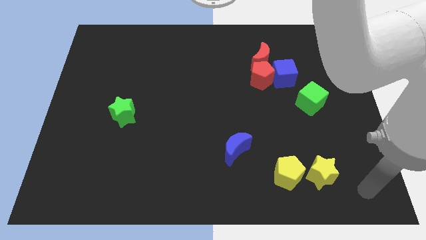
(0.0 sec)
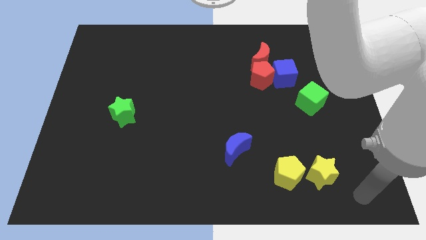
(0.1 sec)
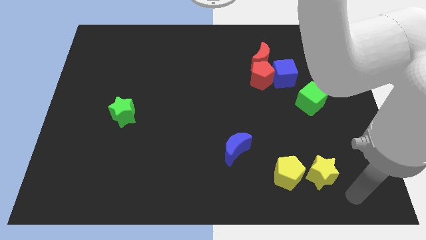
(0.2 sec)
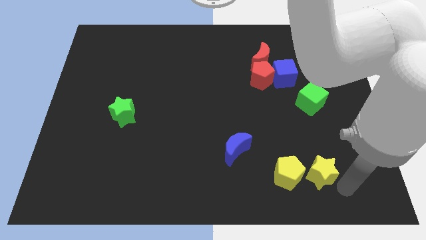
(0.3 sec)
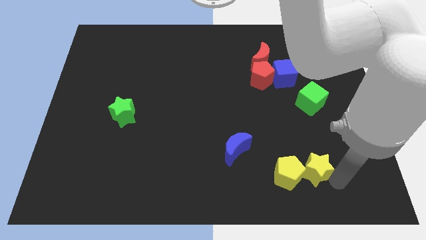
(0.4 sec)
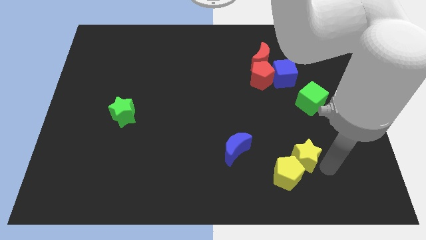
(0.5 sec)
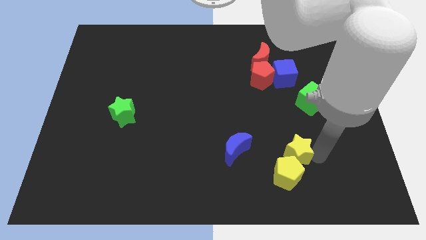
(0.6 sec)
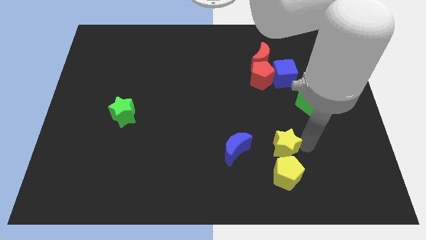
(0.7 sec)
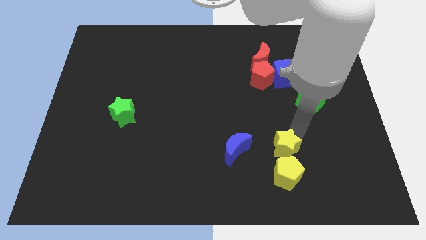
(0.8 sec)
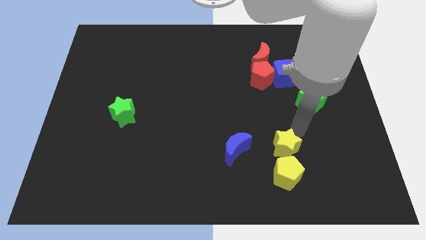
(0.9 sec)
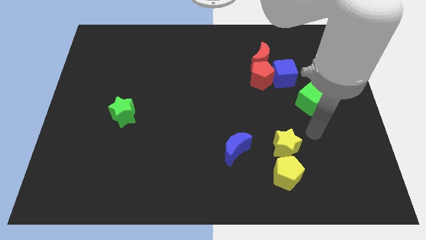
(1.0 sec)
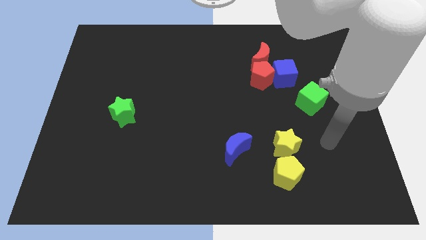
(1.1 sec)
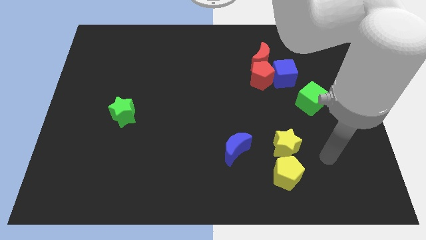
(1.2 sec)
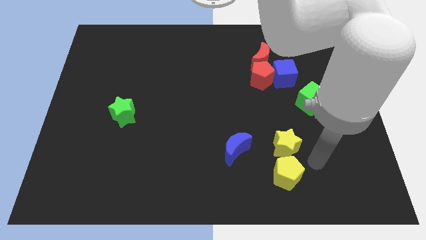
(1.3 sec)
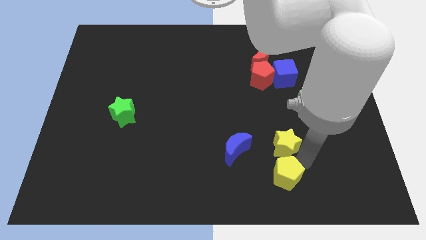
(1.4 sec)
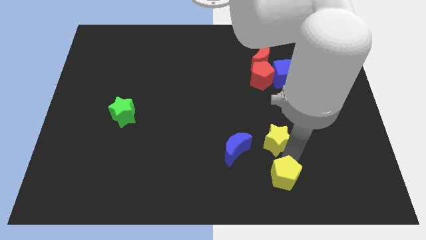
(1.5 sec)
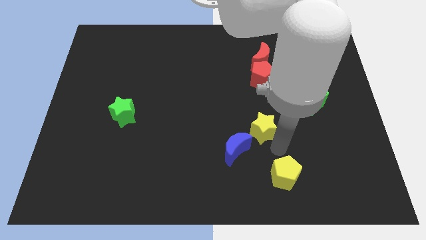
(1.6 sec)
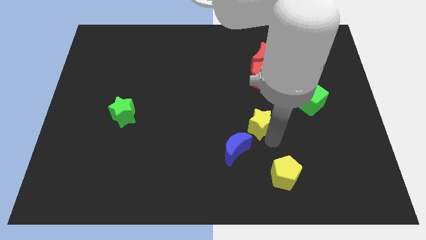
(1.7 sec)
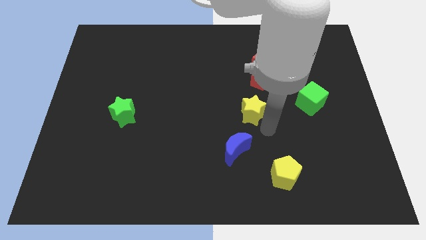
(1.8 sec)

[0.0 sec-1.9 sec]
move the yellow star diagonally top left to the yellow pentagon

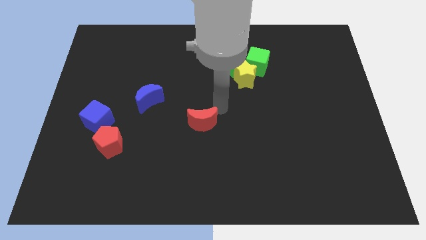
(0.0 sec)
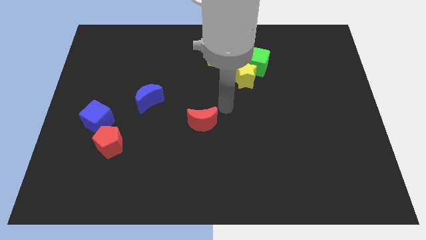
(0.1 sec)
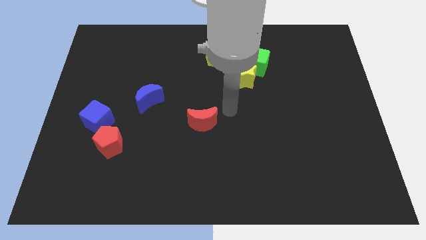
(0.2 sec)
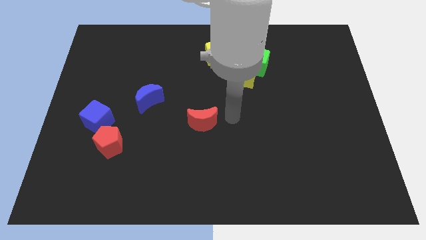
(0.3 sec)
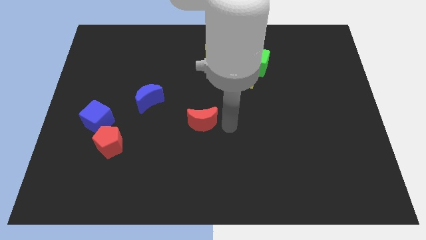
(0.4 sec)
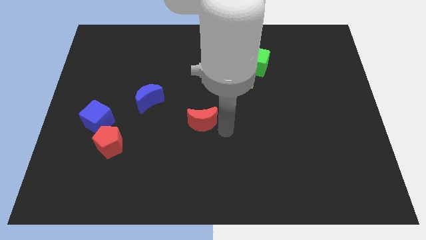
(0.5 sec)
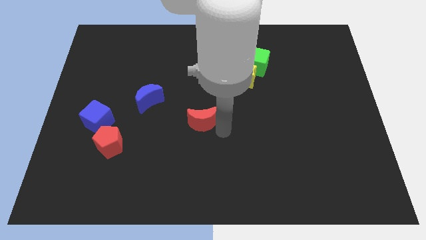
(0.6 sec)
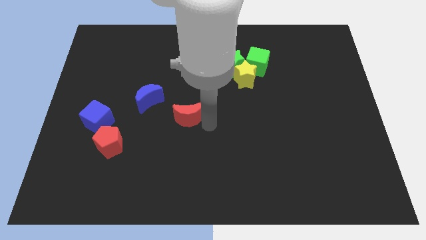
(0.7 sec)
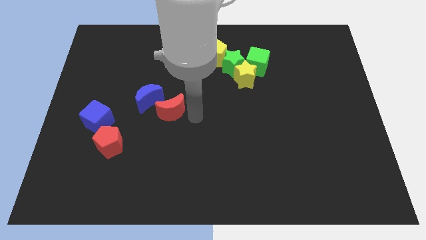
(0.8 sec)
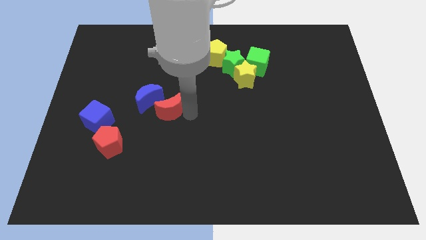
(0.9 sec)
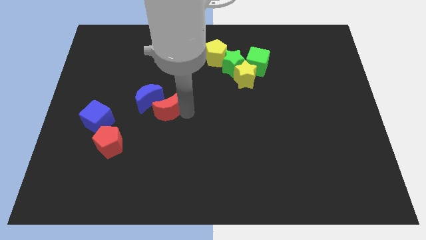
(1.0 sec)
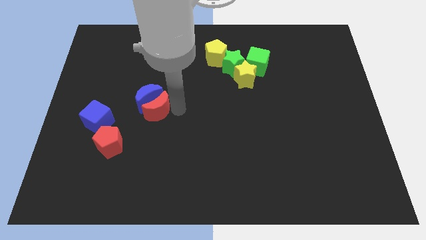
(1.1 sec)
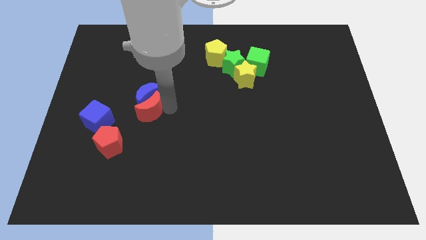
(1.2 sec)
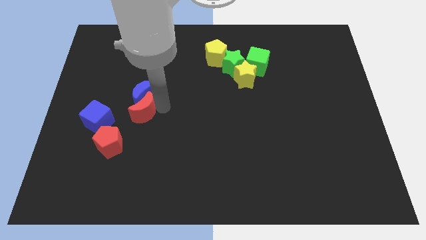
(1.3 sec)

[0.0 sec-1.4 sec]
push the red crescent into the blue crescent

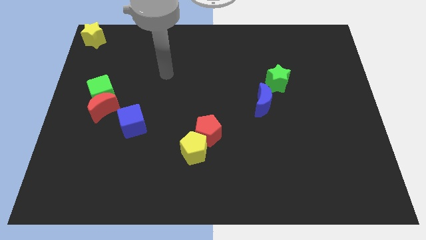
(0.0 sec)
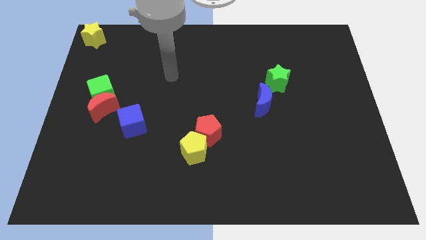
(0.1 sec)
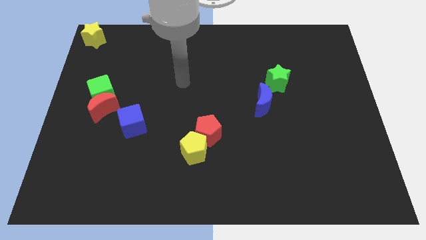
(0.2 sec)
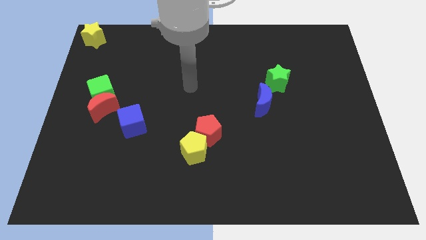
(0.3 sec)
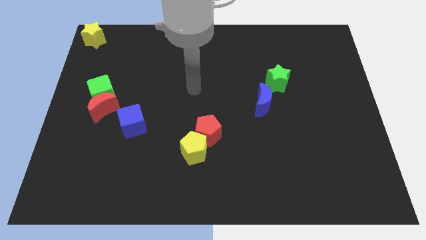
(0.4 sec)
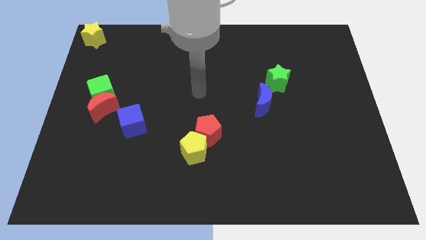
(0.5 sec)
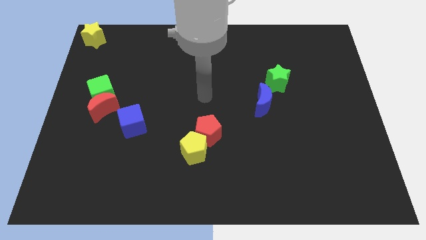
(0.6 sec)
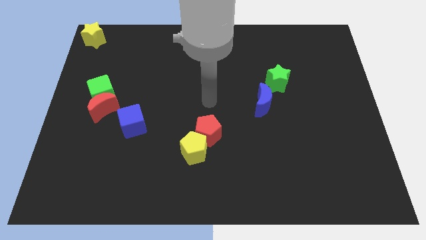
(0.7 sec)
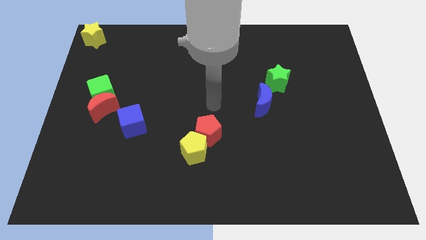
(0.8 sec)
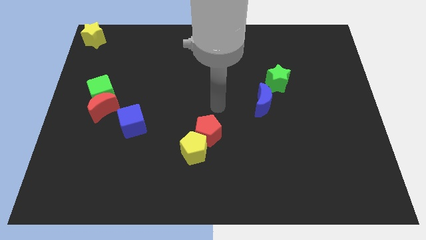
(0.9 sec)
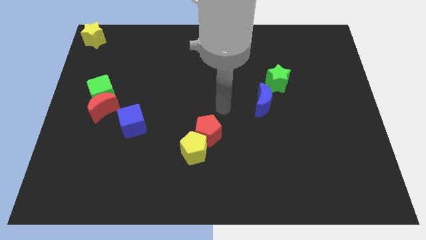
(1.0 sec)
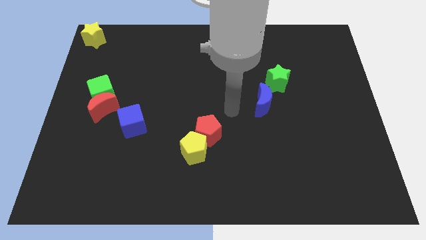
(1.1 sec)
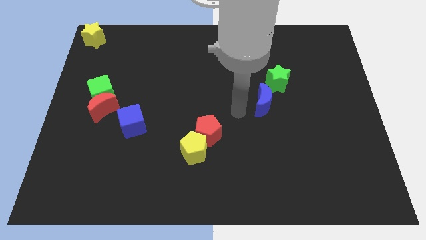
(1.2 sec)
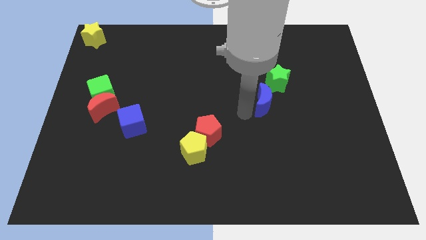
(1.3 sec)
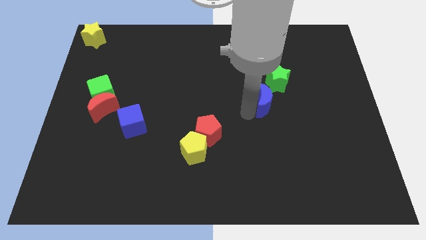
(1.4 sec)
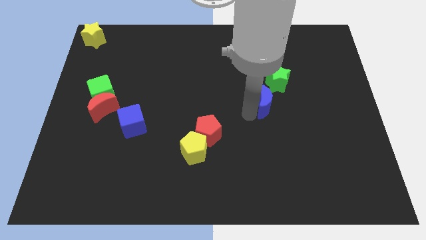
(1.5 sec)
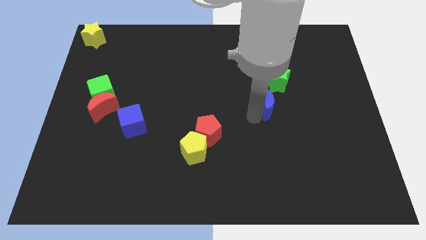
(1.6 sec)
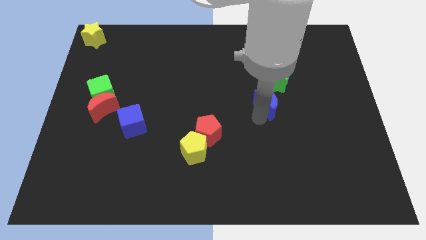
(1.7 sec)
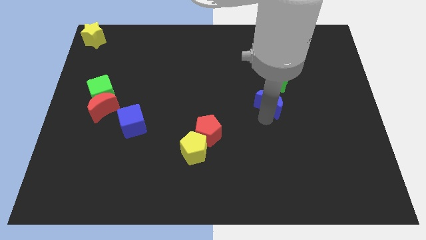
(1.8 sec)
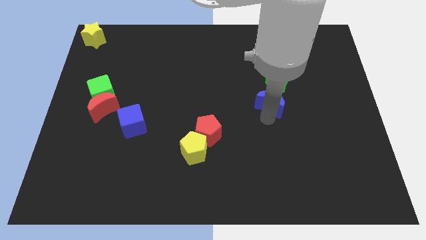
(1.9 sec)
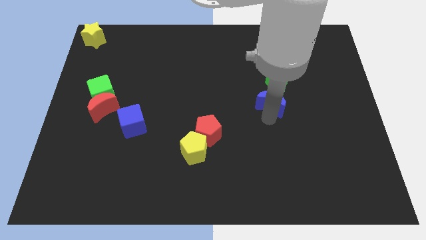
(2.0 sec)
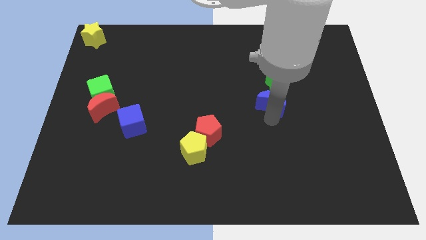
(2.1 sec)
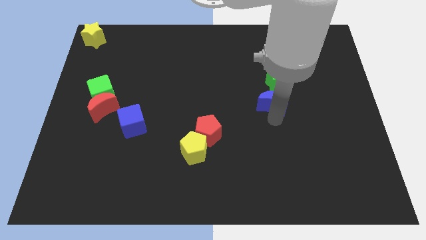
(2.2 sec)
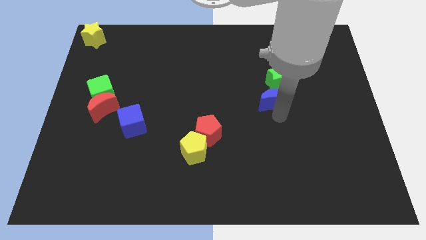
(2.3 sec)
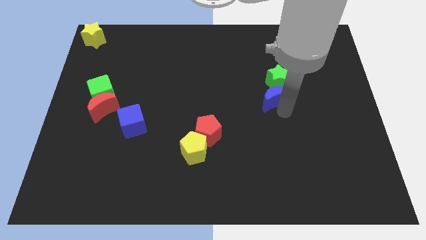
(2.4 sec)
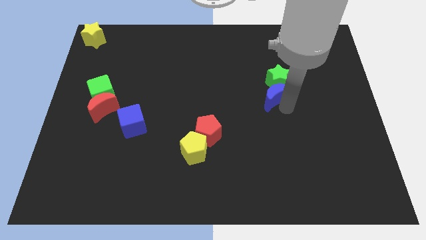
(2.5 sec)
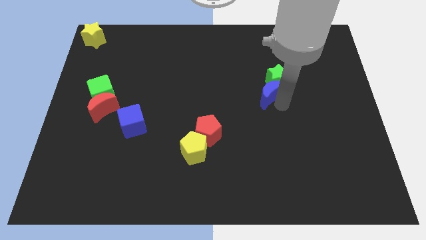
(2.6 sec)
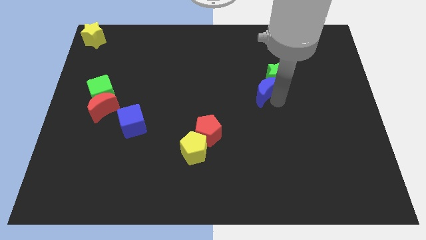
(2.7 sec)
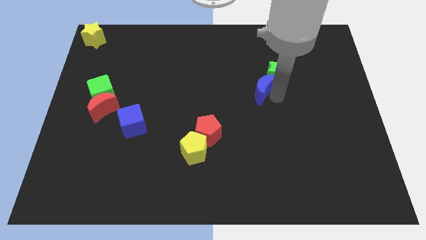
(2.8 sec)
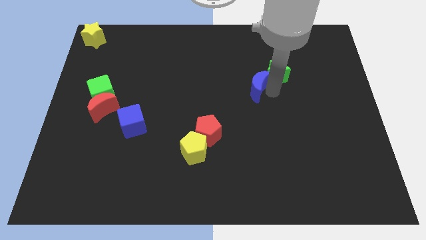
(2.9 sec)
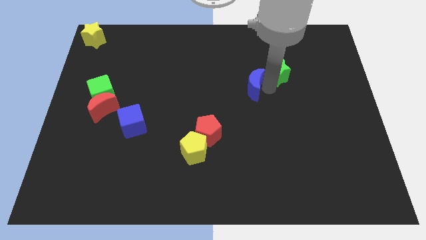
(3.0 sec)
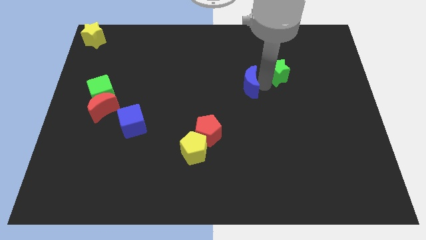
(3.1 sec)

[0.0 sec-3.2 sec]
push the blue crescent into the green star

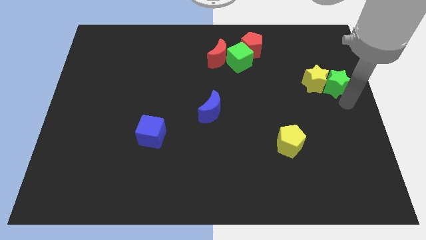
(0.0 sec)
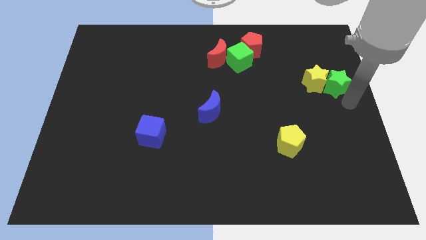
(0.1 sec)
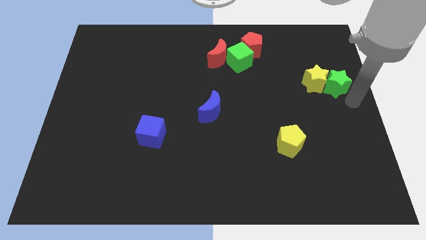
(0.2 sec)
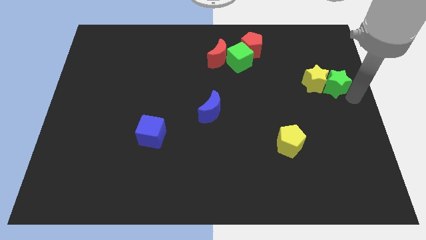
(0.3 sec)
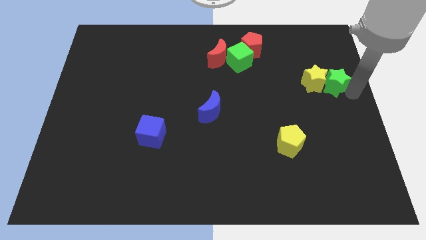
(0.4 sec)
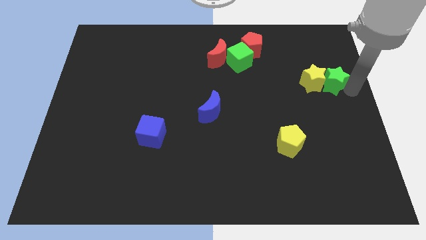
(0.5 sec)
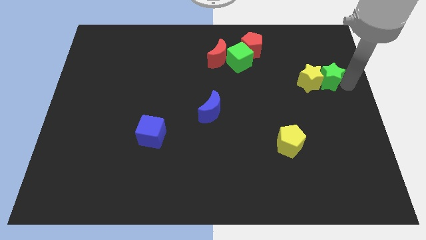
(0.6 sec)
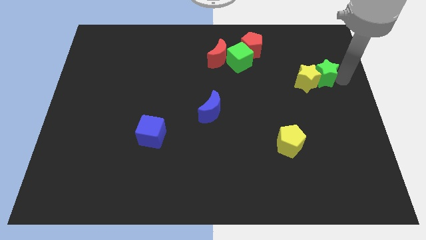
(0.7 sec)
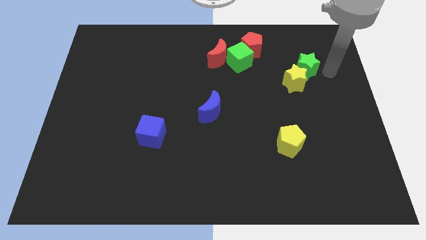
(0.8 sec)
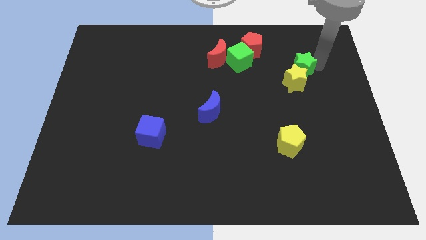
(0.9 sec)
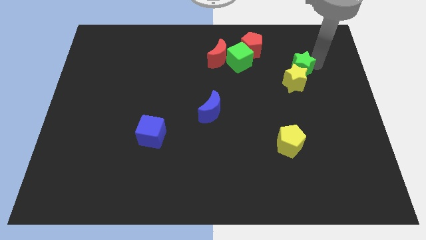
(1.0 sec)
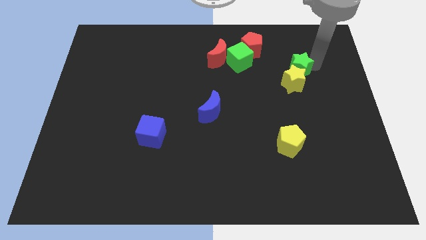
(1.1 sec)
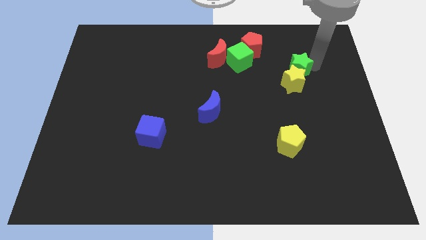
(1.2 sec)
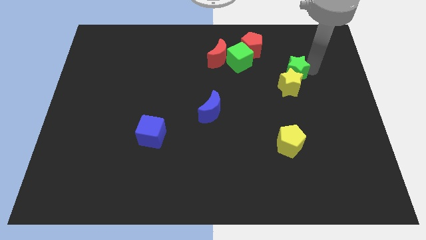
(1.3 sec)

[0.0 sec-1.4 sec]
place green star above the yellow star

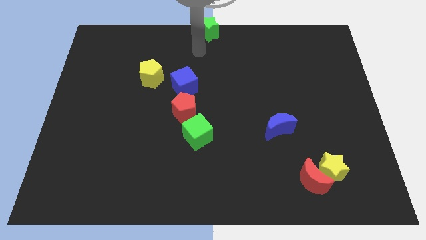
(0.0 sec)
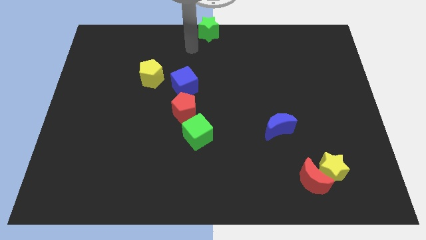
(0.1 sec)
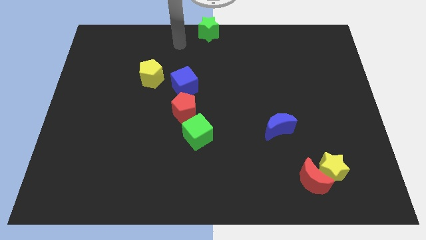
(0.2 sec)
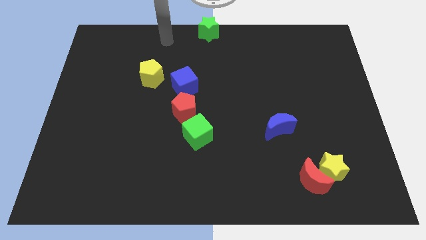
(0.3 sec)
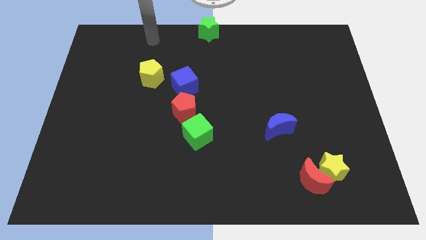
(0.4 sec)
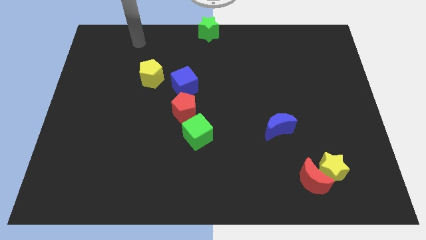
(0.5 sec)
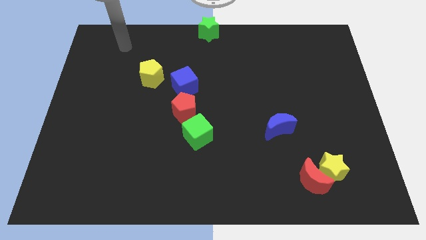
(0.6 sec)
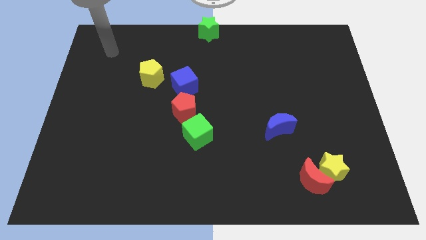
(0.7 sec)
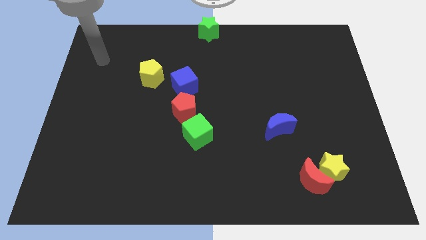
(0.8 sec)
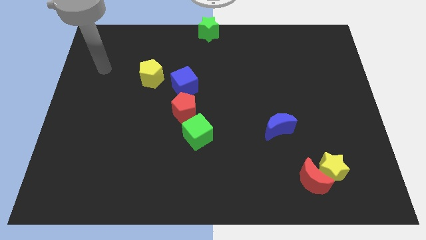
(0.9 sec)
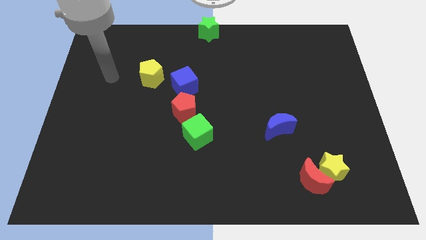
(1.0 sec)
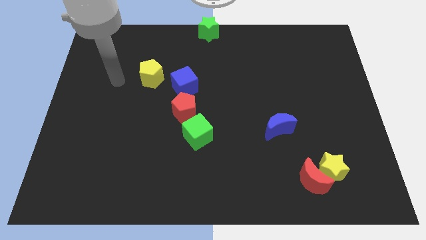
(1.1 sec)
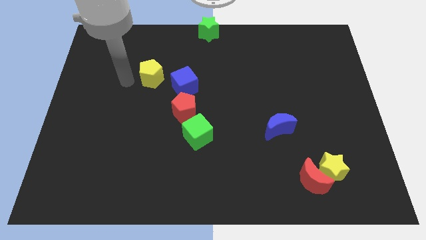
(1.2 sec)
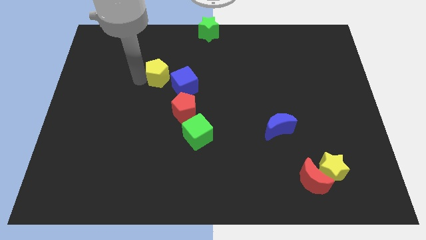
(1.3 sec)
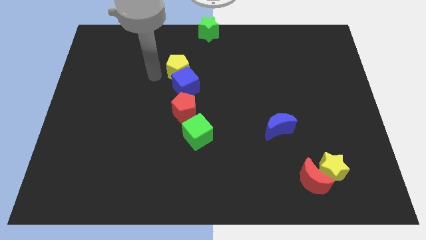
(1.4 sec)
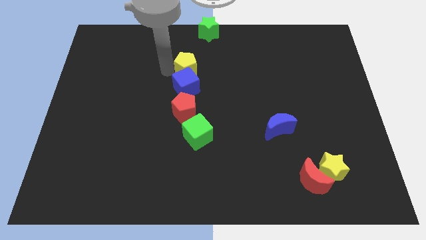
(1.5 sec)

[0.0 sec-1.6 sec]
push the yellow pentagon into blue cube
